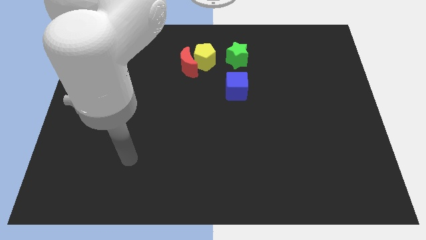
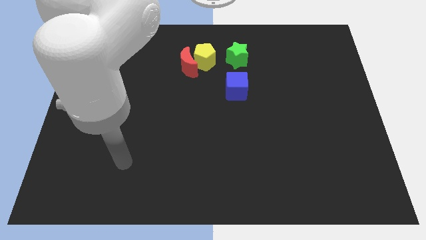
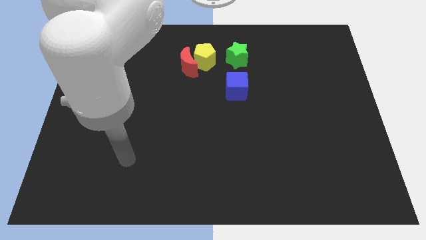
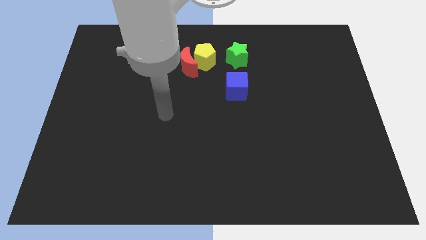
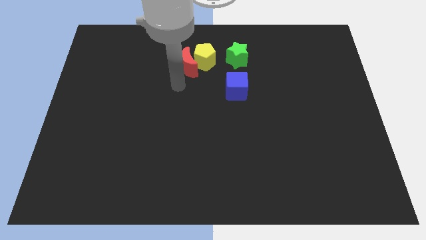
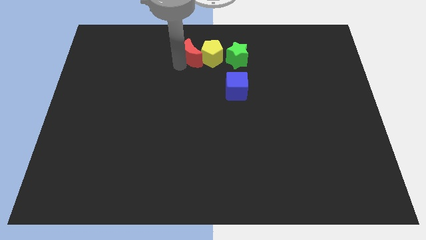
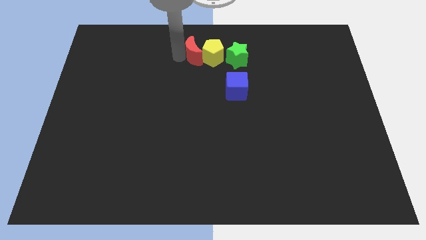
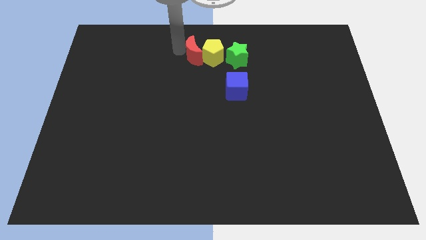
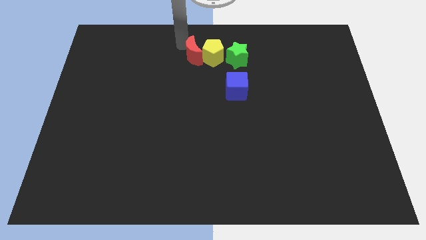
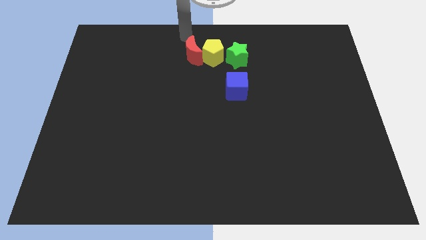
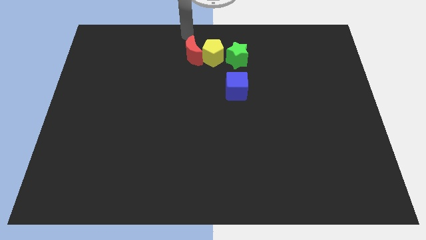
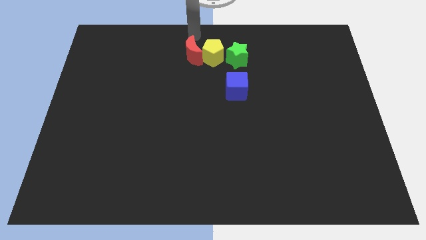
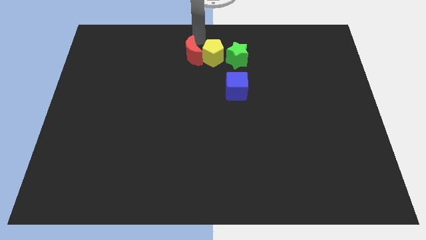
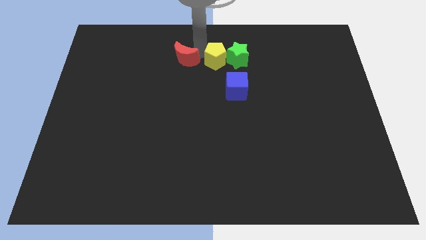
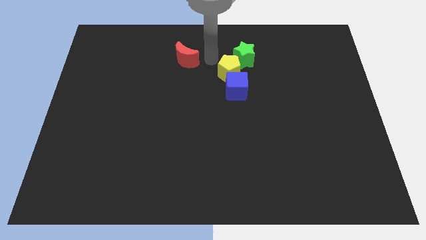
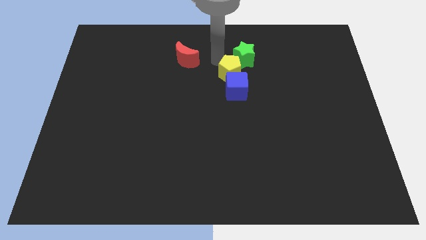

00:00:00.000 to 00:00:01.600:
move the yellow block next to the star

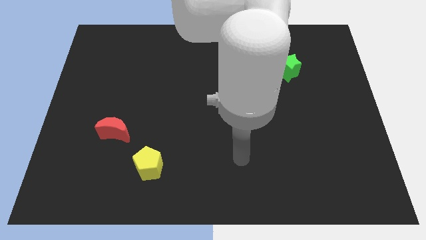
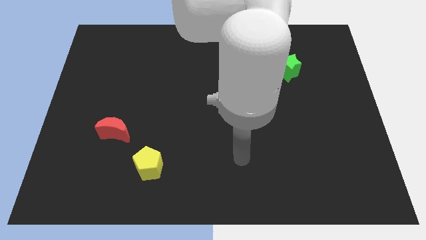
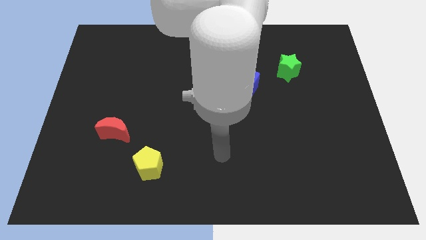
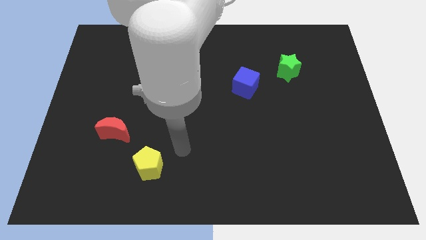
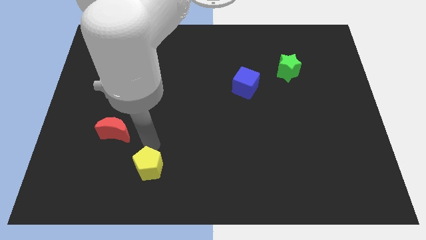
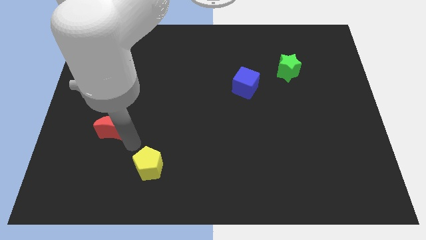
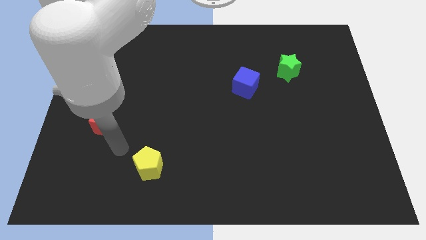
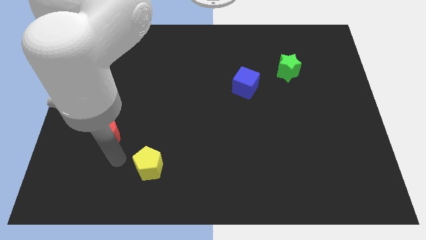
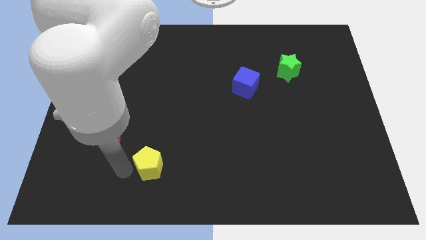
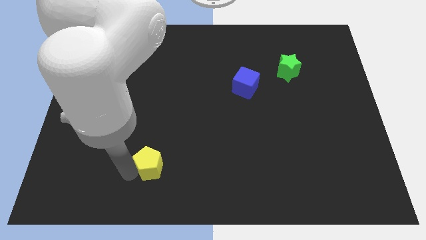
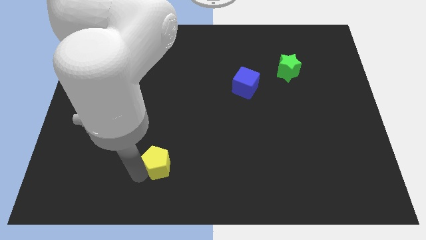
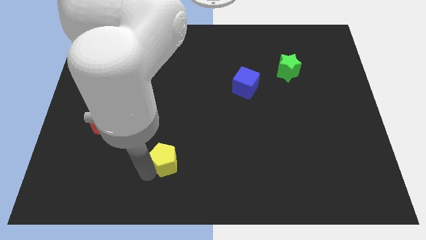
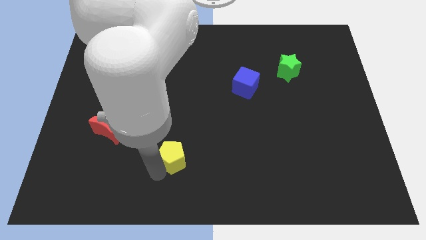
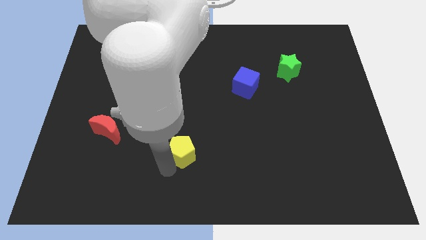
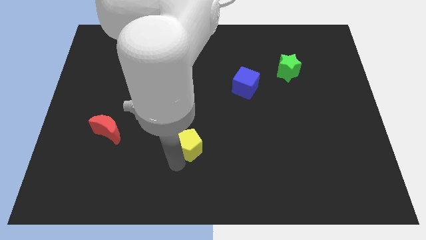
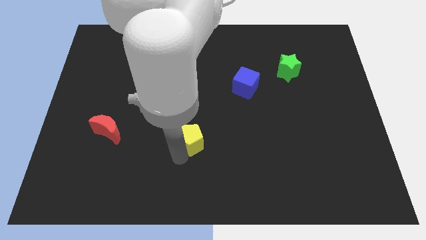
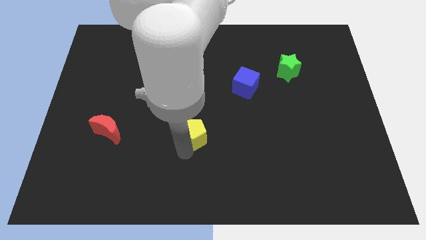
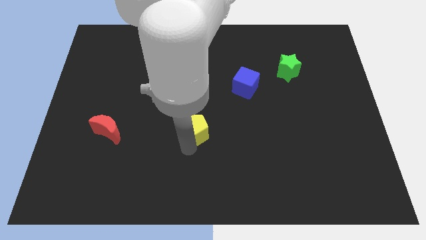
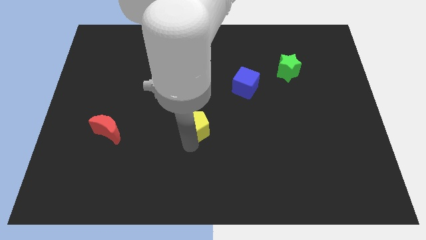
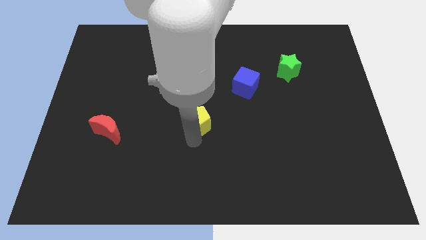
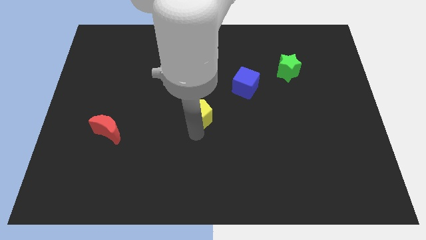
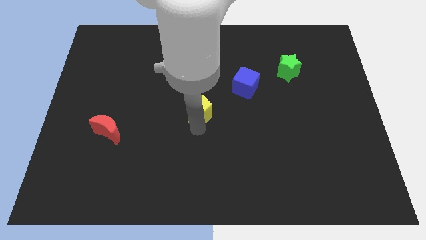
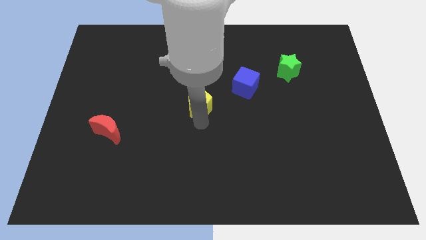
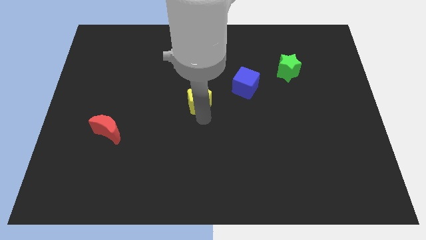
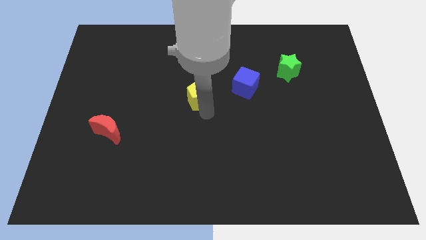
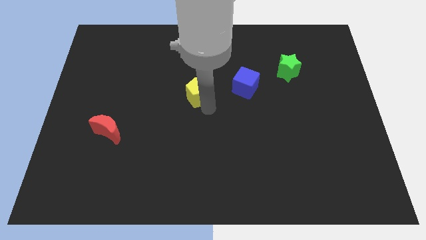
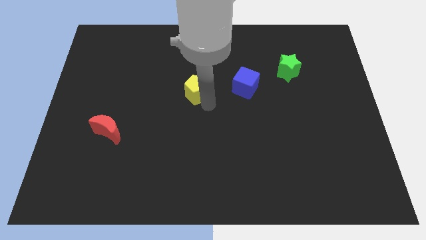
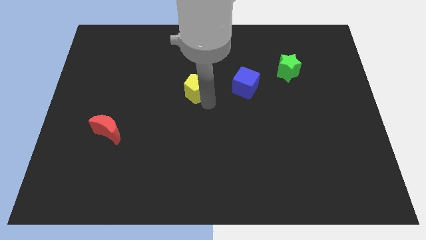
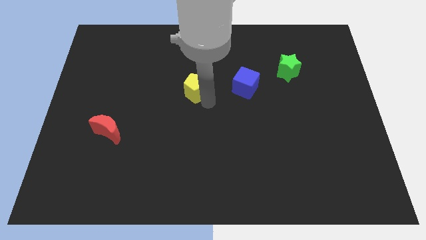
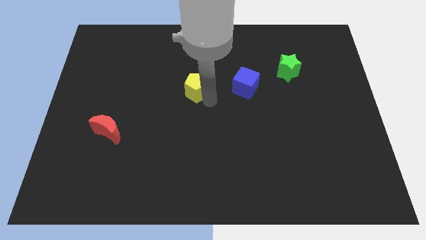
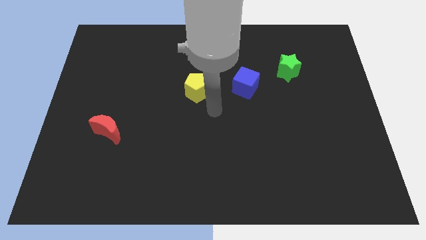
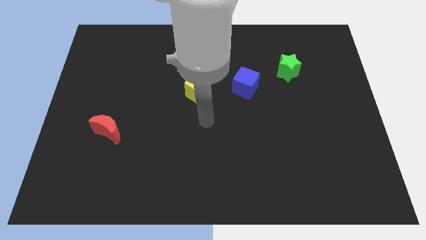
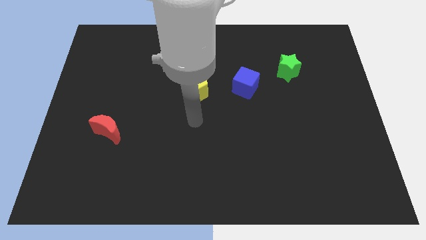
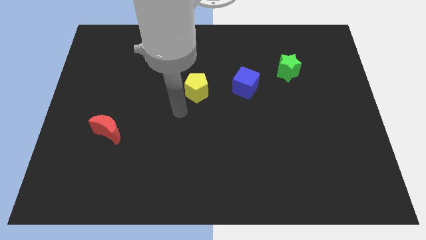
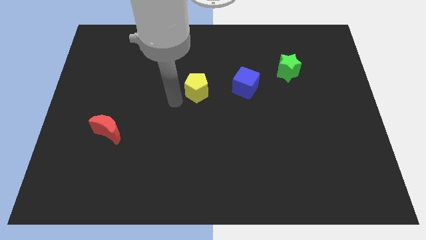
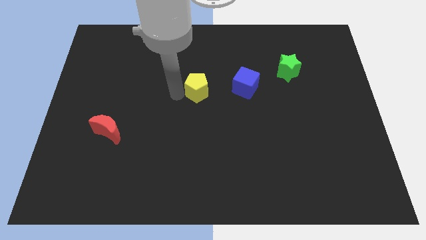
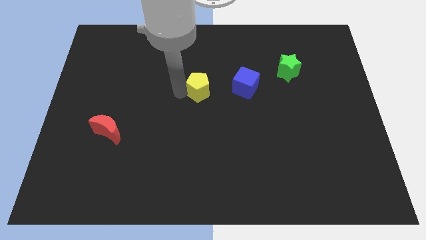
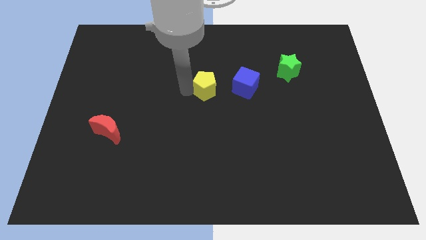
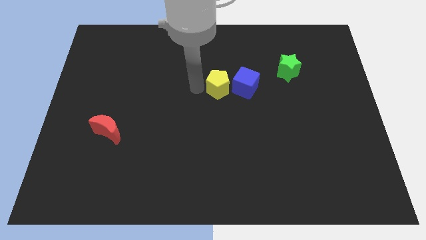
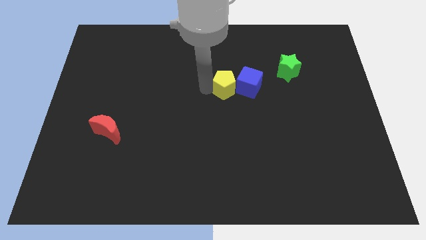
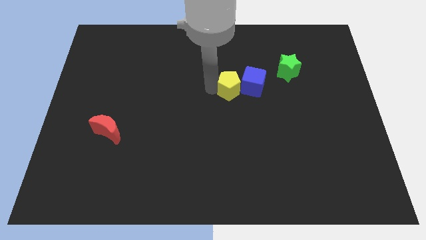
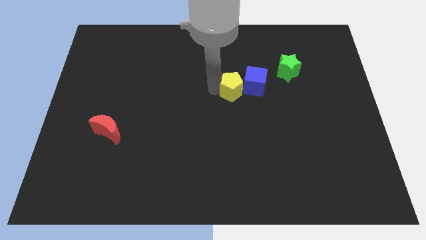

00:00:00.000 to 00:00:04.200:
push the yellow pentagon next to the blue block

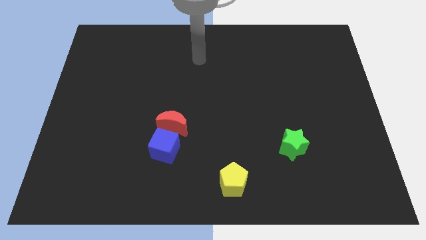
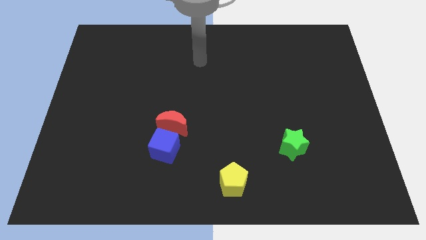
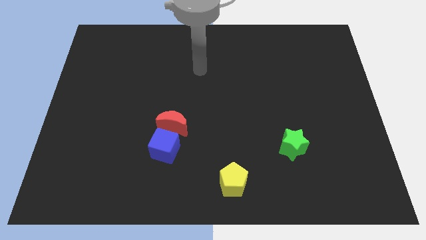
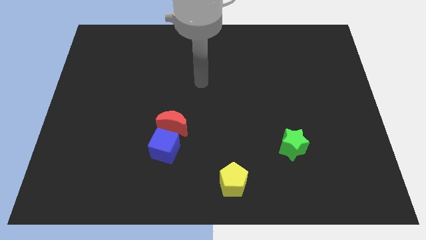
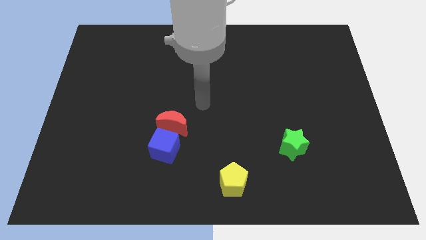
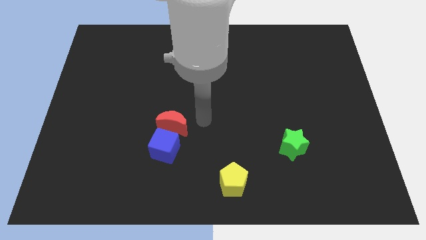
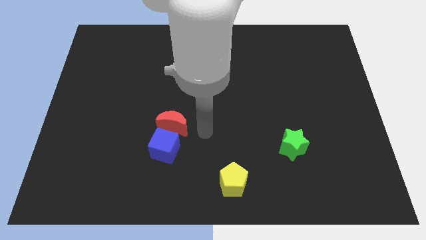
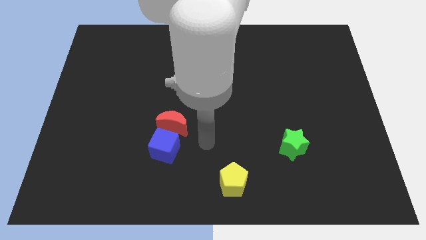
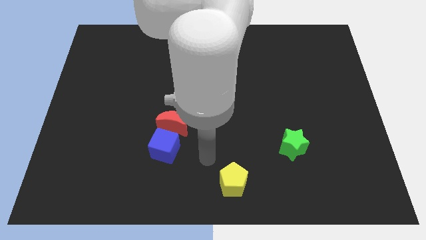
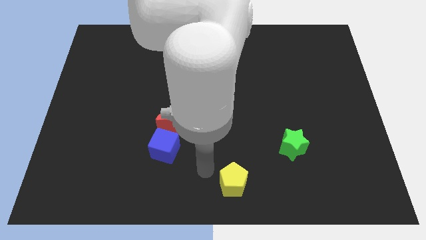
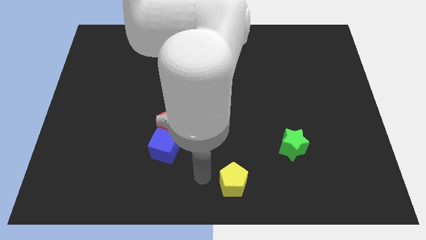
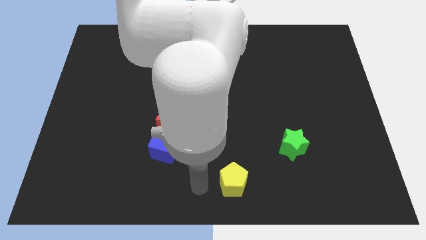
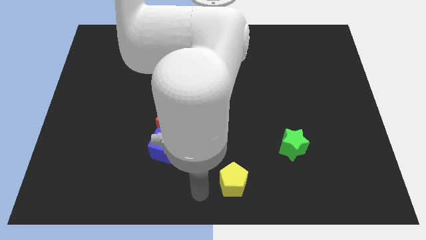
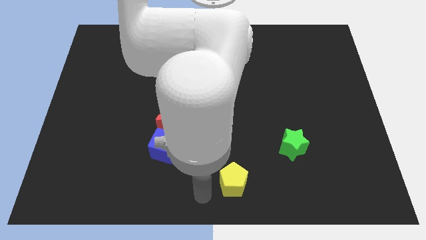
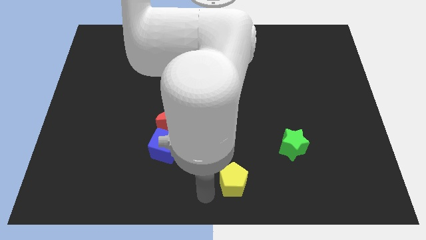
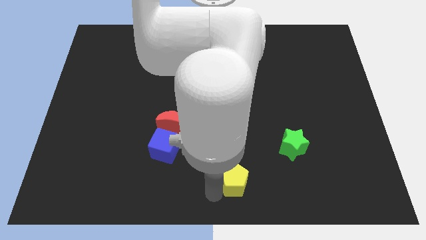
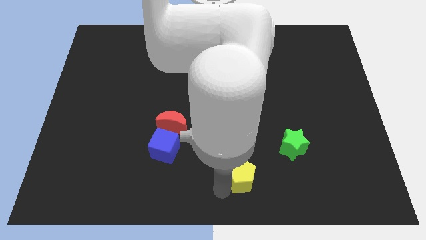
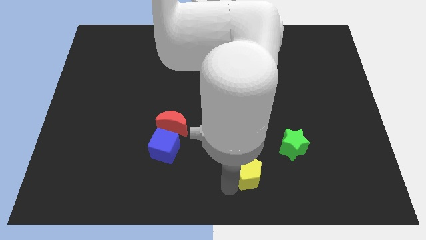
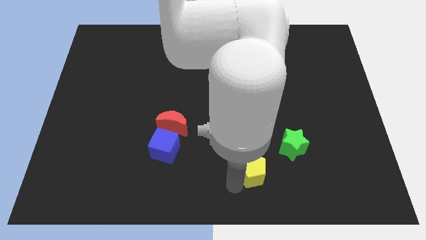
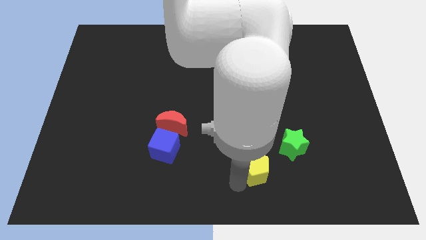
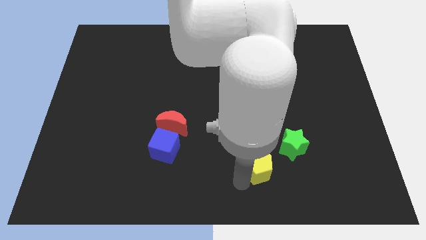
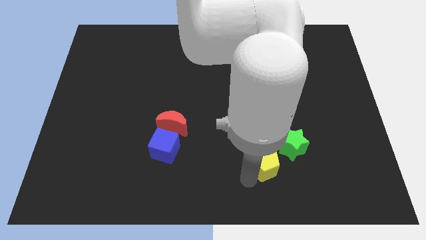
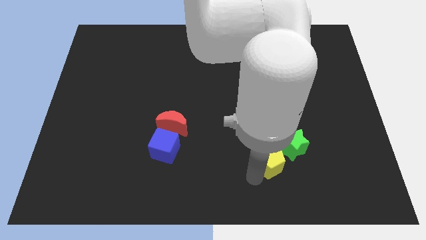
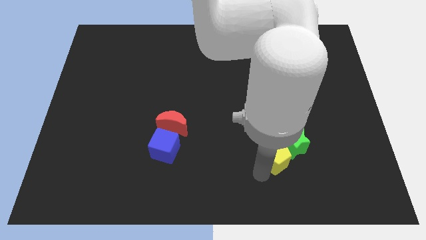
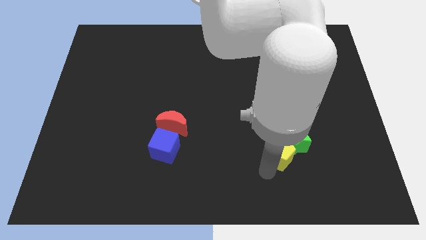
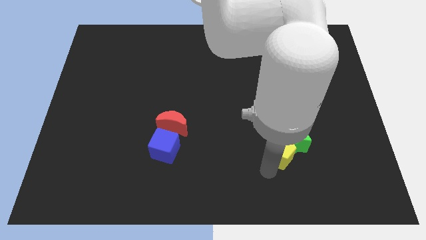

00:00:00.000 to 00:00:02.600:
put the yellow block next to the green star

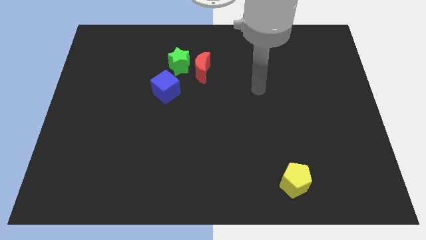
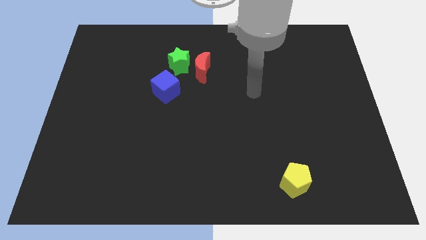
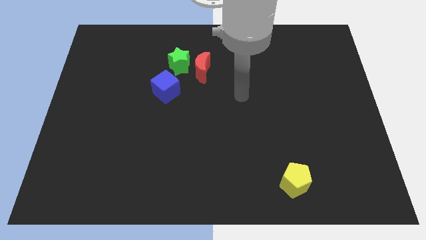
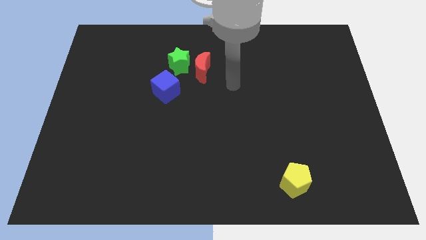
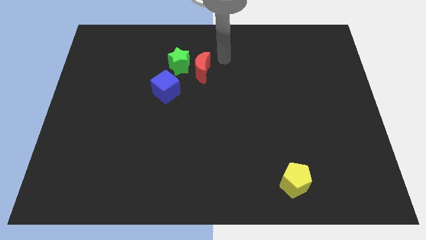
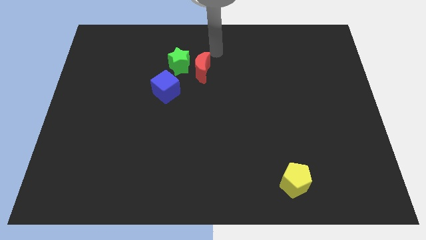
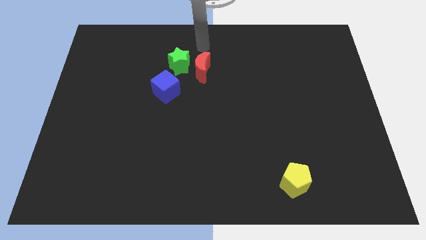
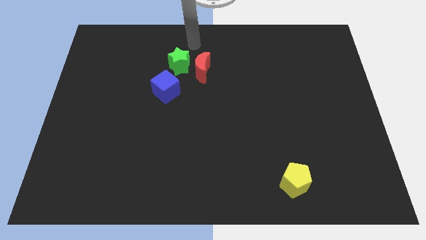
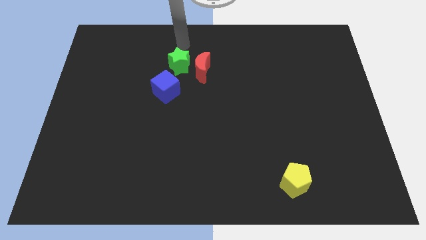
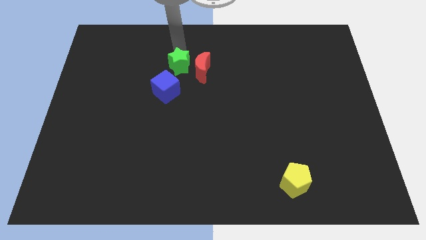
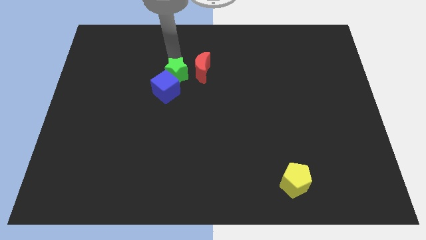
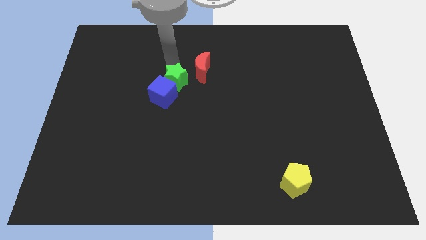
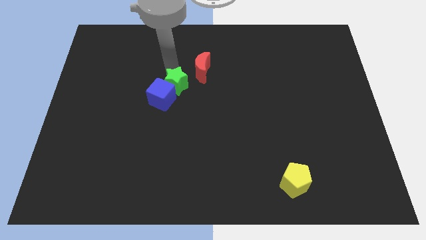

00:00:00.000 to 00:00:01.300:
slide the star close to the cube
